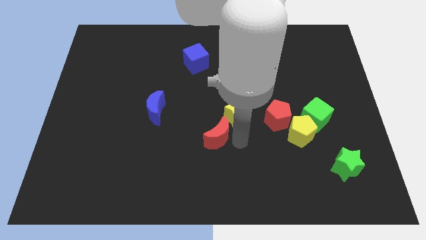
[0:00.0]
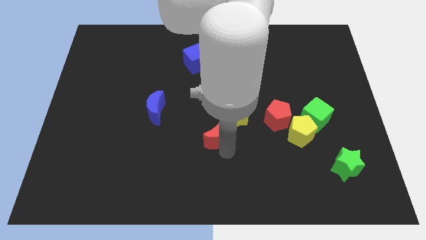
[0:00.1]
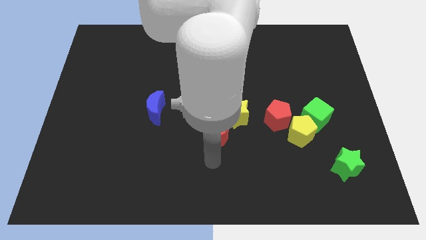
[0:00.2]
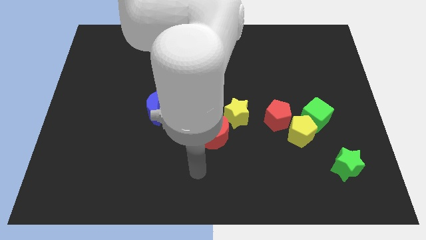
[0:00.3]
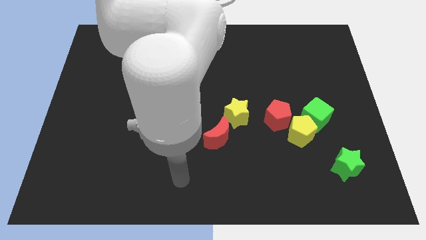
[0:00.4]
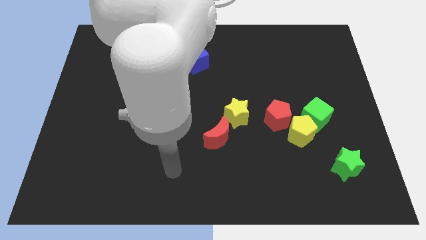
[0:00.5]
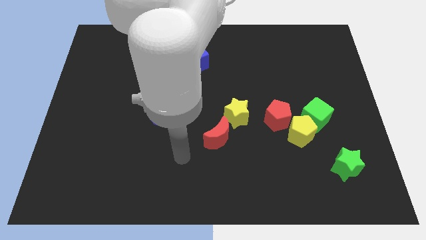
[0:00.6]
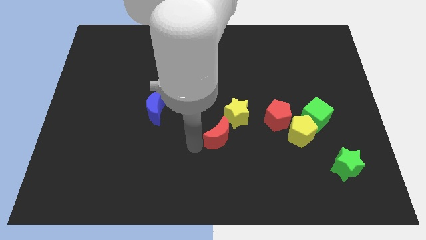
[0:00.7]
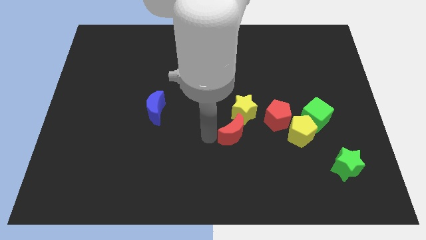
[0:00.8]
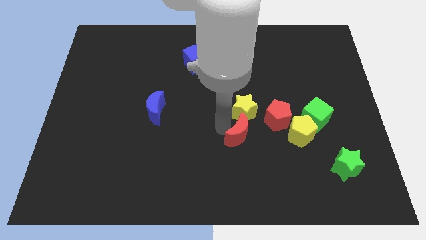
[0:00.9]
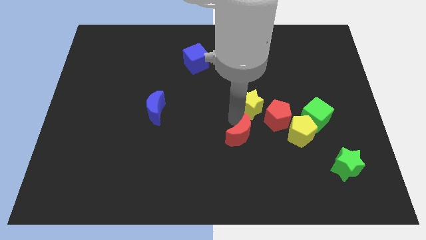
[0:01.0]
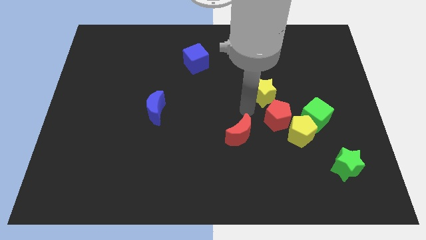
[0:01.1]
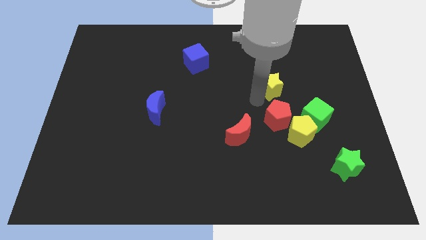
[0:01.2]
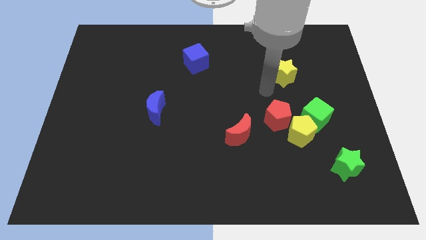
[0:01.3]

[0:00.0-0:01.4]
separate the yellow star and red moon

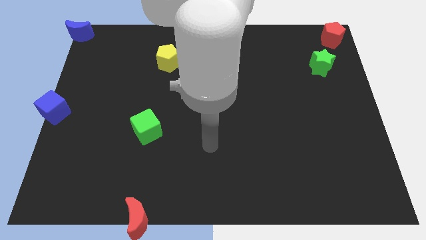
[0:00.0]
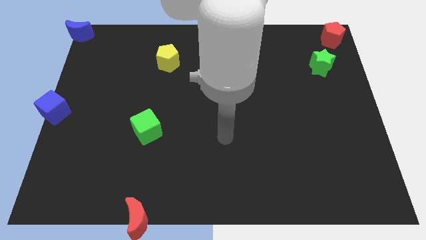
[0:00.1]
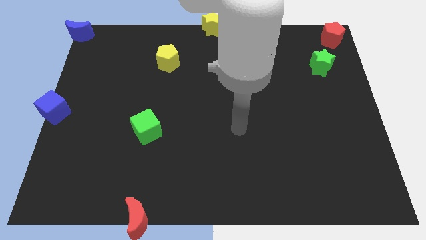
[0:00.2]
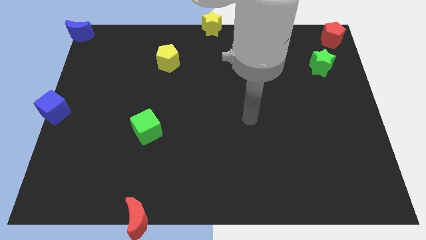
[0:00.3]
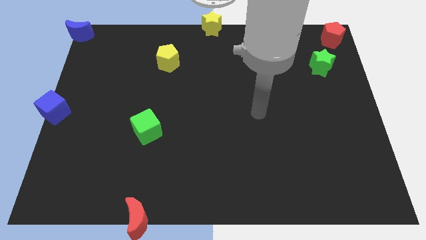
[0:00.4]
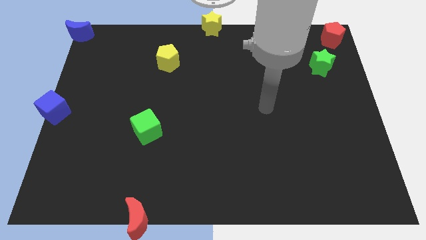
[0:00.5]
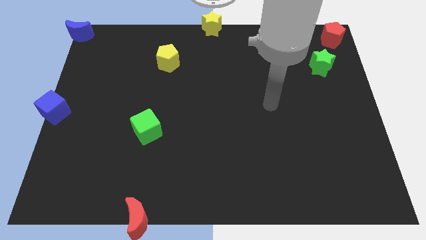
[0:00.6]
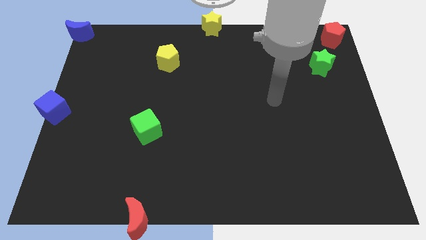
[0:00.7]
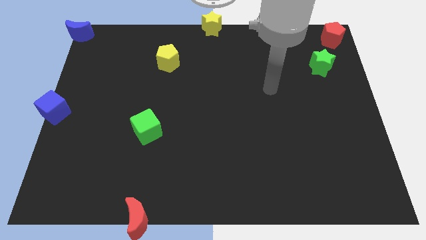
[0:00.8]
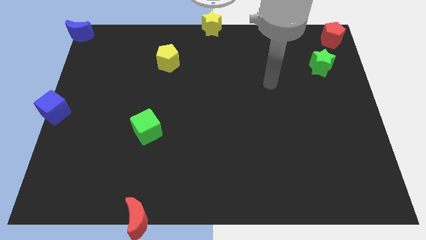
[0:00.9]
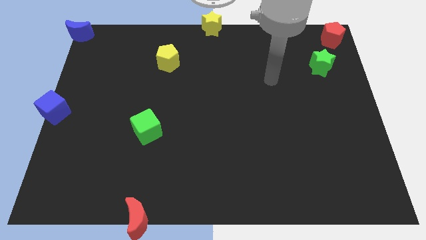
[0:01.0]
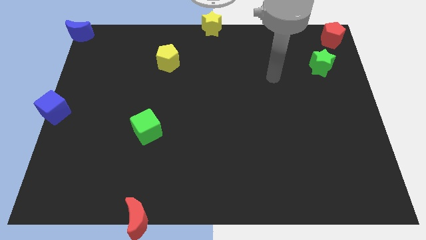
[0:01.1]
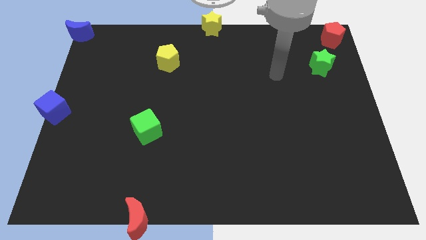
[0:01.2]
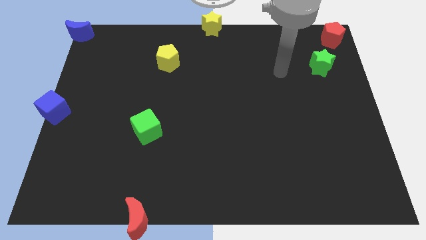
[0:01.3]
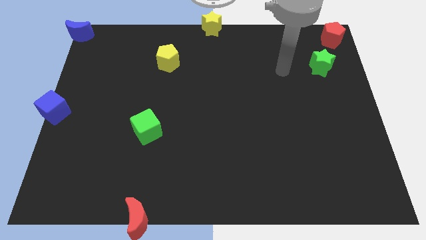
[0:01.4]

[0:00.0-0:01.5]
move your arm towards the top side of the board

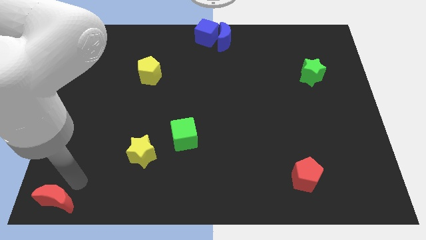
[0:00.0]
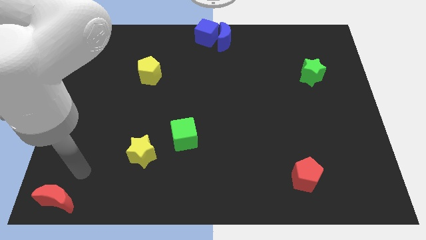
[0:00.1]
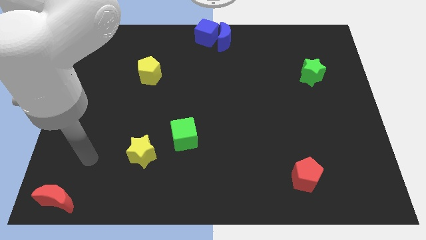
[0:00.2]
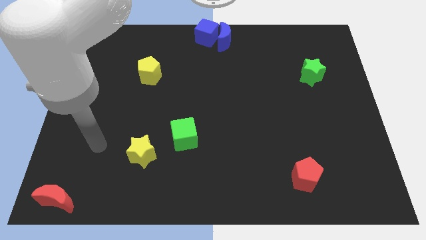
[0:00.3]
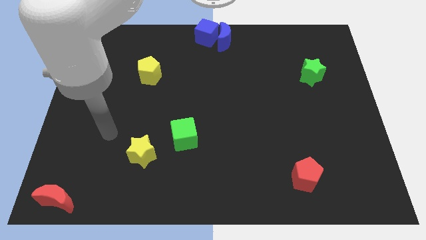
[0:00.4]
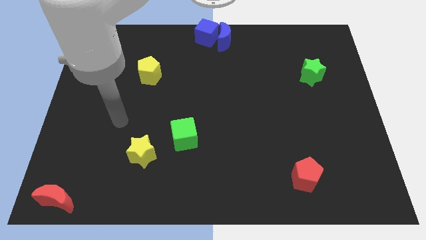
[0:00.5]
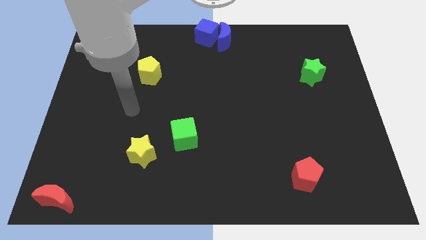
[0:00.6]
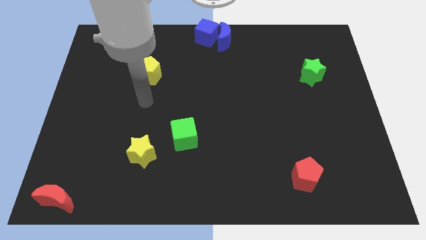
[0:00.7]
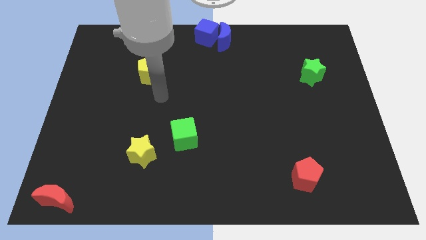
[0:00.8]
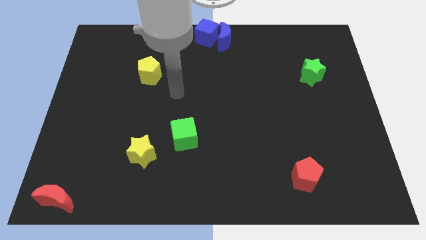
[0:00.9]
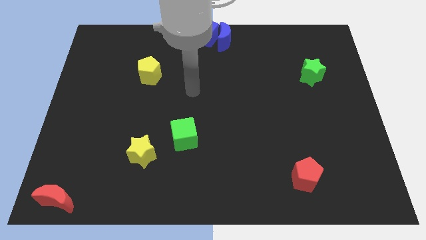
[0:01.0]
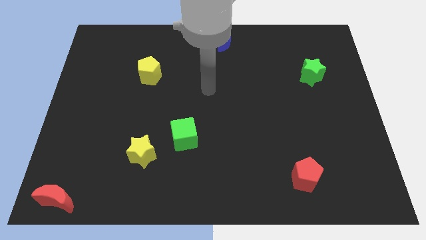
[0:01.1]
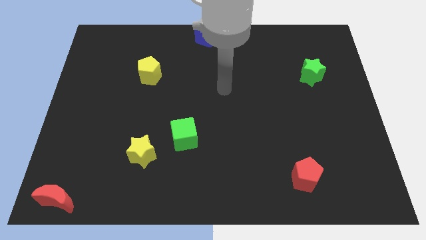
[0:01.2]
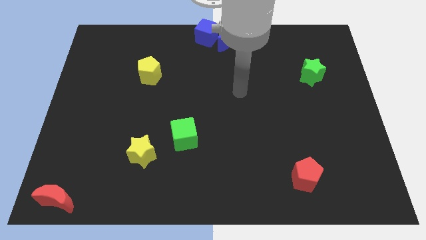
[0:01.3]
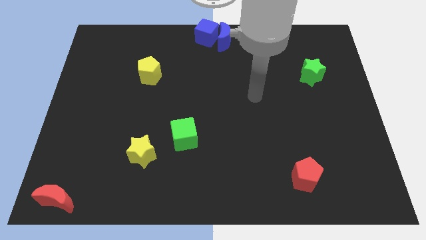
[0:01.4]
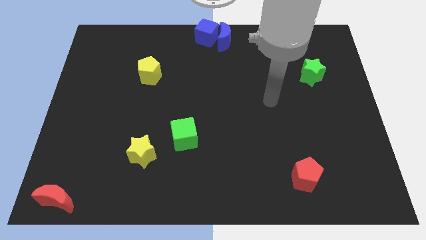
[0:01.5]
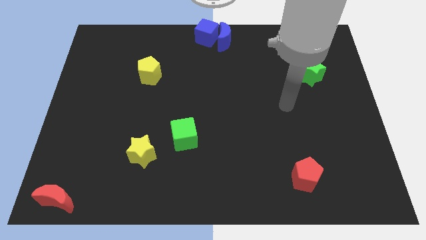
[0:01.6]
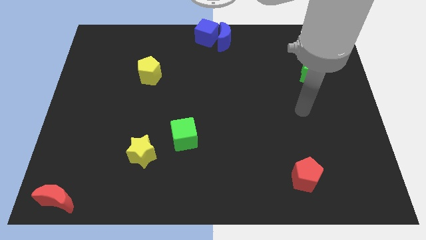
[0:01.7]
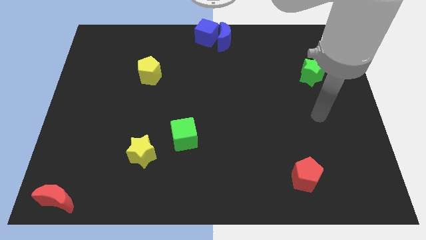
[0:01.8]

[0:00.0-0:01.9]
point your arm between green star and red pentagon

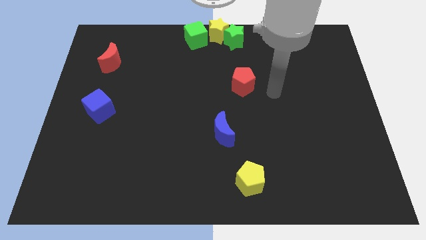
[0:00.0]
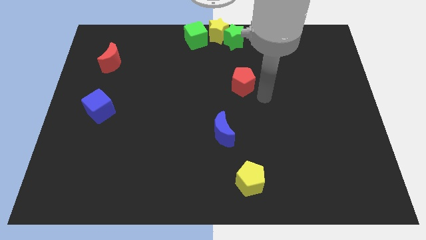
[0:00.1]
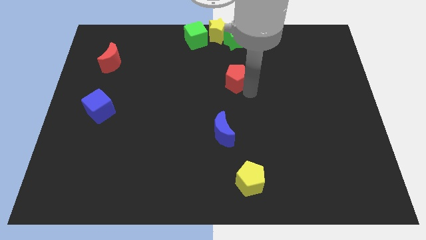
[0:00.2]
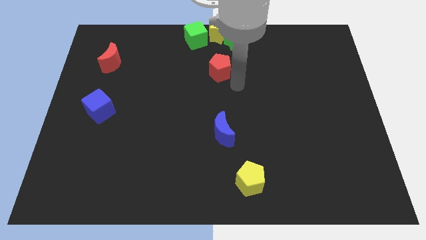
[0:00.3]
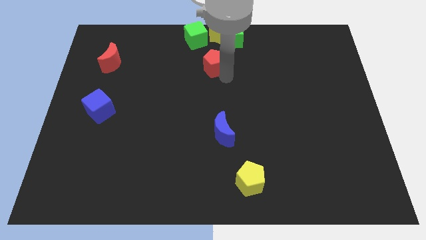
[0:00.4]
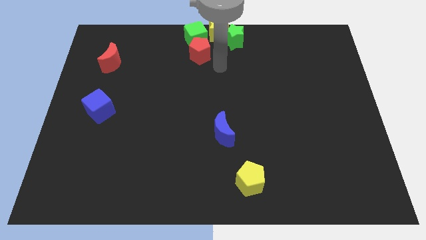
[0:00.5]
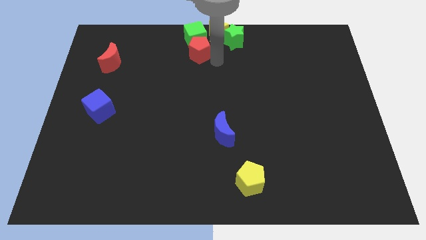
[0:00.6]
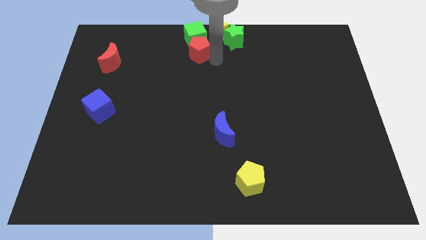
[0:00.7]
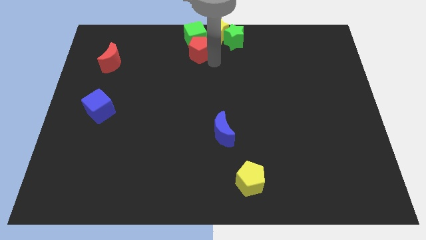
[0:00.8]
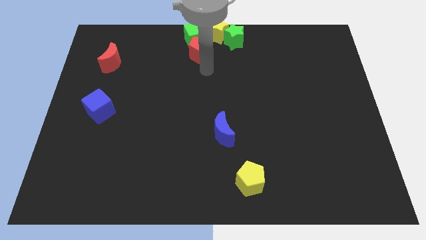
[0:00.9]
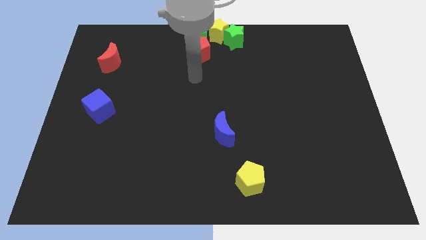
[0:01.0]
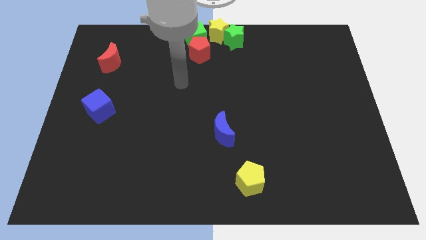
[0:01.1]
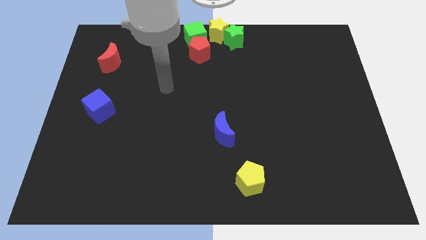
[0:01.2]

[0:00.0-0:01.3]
push the red pentagon into the green cube

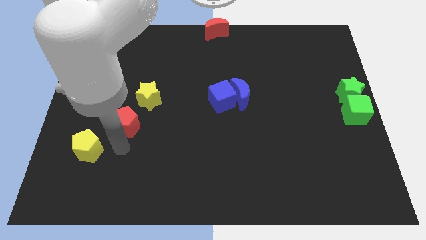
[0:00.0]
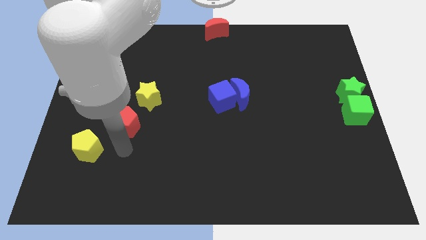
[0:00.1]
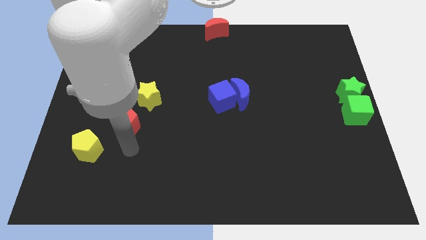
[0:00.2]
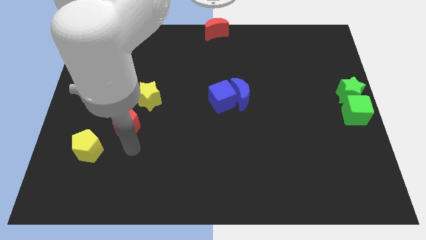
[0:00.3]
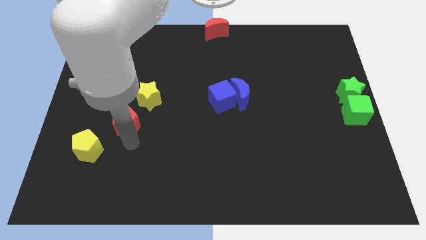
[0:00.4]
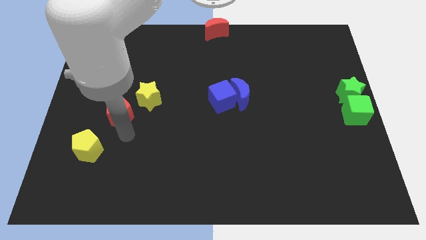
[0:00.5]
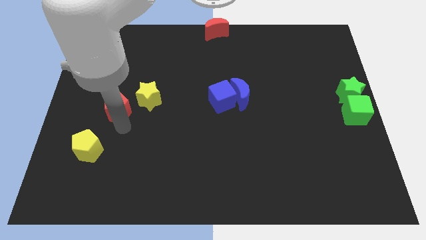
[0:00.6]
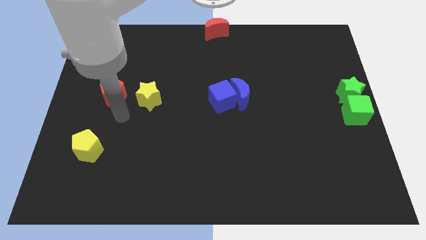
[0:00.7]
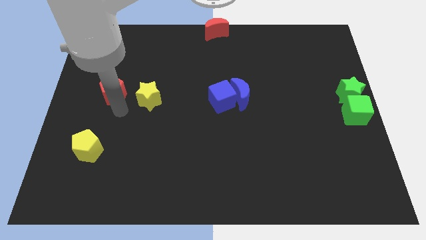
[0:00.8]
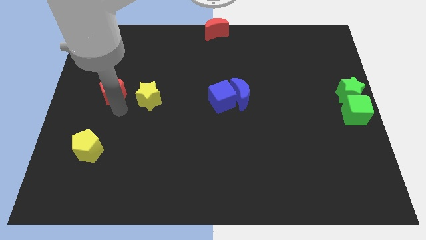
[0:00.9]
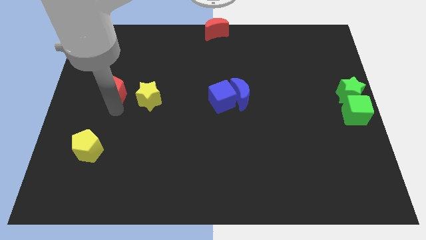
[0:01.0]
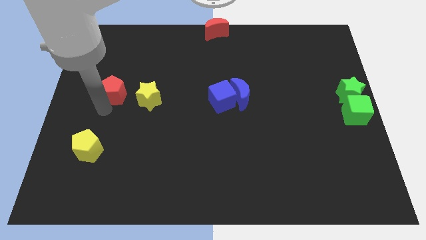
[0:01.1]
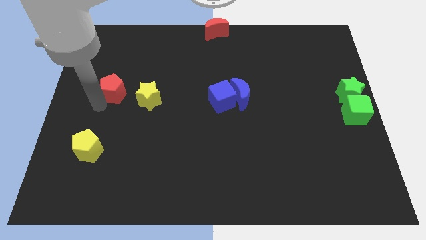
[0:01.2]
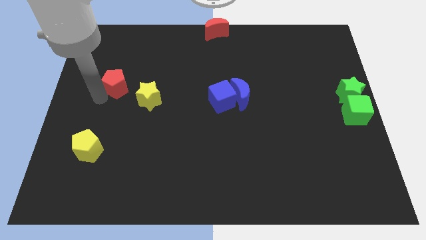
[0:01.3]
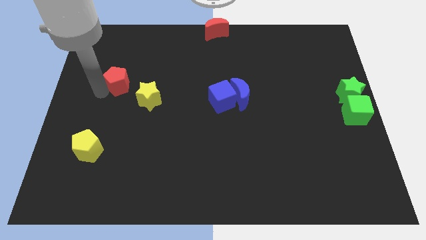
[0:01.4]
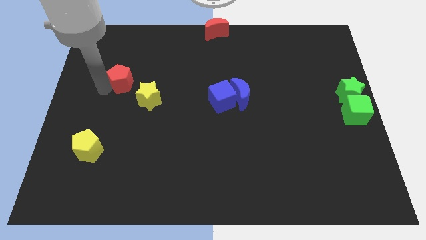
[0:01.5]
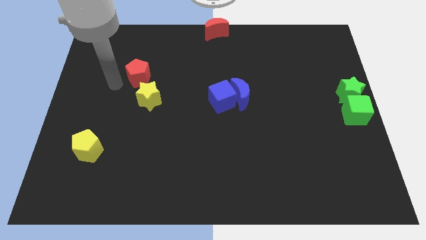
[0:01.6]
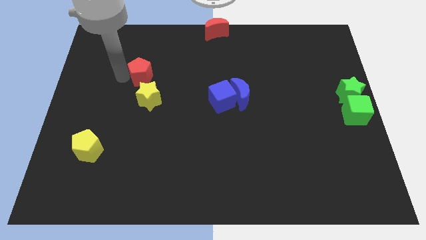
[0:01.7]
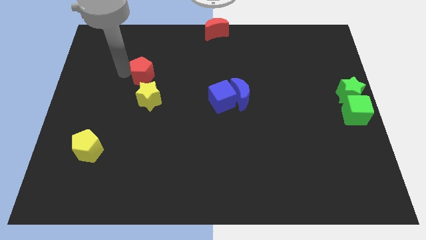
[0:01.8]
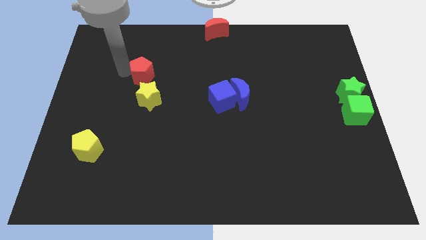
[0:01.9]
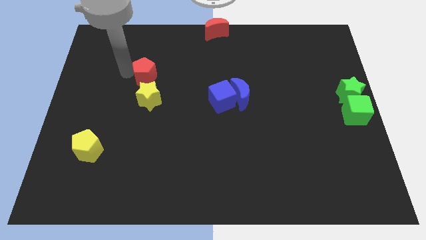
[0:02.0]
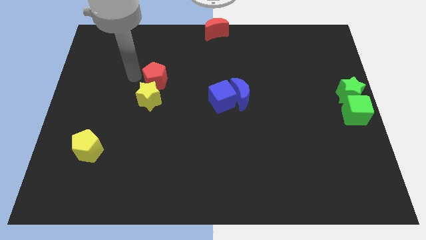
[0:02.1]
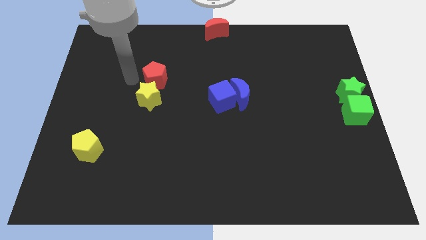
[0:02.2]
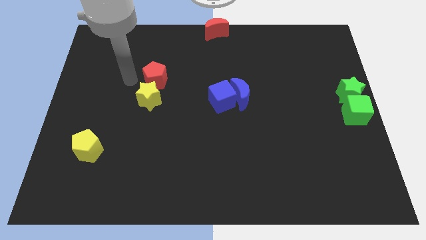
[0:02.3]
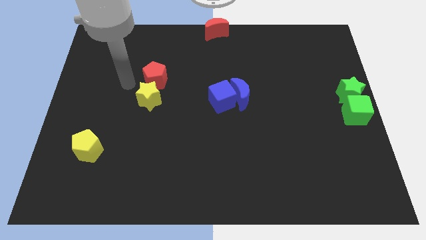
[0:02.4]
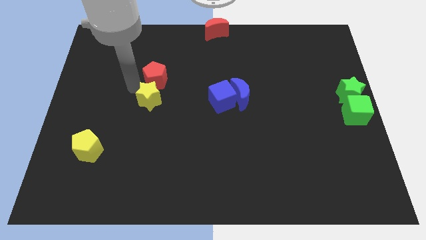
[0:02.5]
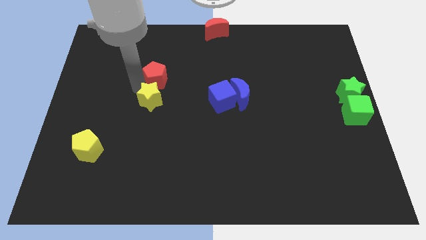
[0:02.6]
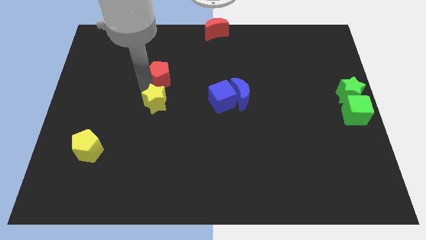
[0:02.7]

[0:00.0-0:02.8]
place the red pentagon above the yellow star

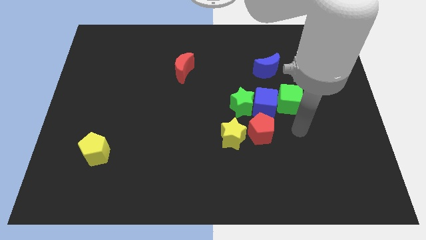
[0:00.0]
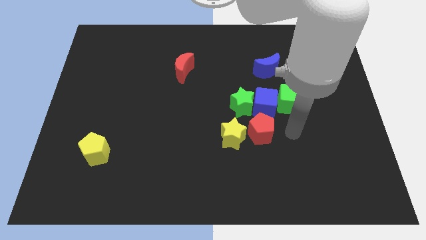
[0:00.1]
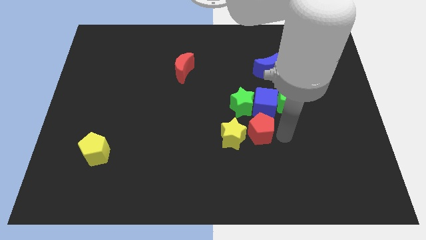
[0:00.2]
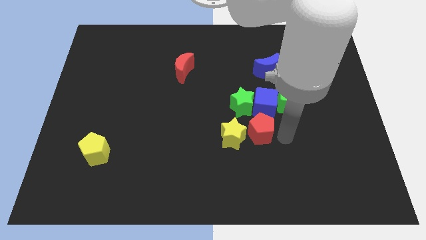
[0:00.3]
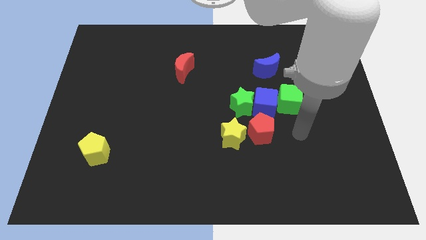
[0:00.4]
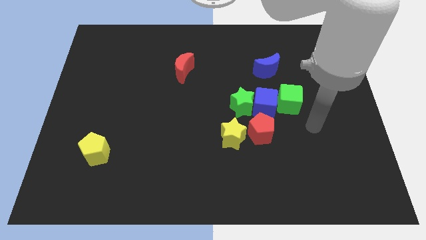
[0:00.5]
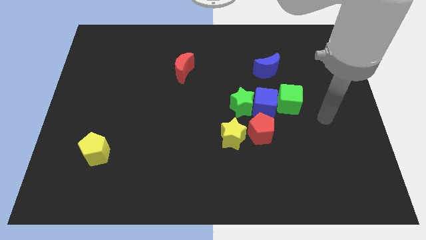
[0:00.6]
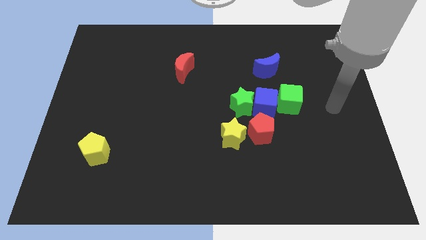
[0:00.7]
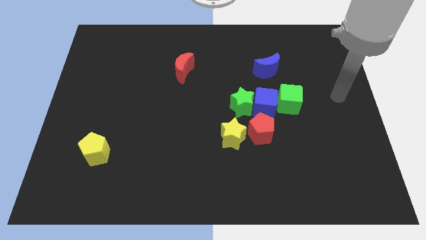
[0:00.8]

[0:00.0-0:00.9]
move your arm away from red pentagon
